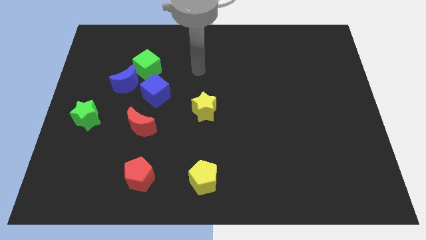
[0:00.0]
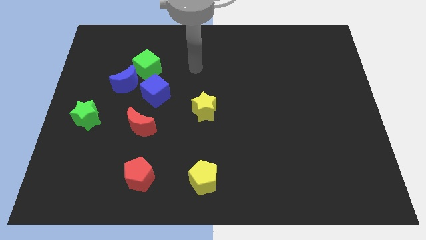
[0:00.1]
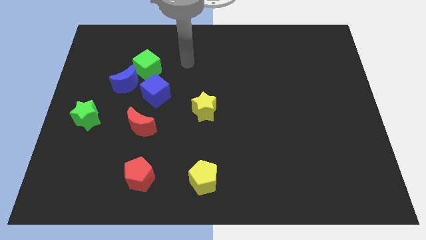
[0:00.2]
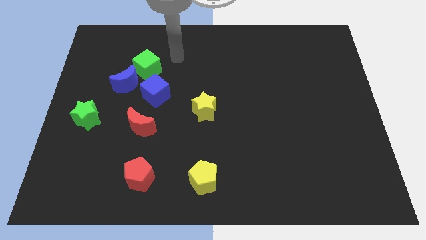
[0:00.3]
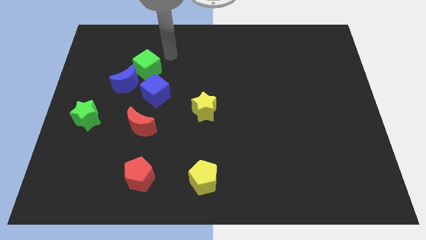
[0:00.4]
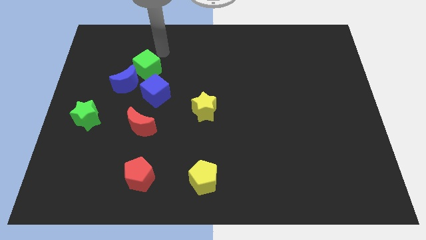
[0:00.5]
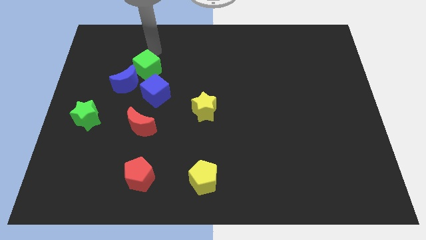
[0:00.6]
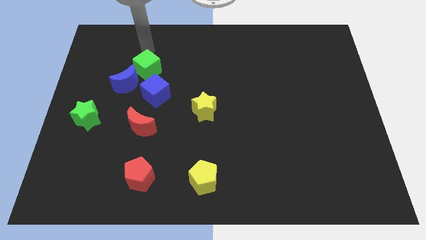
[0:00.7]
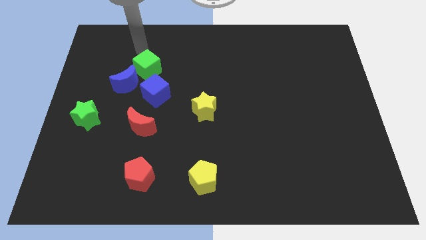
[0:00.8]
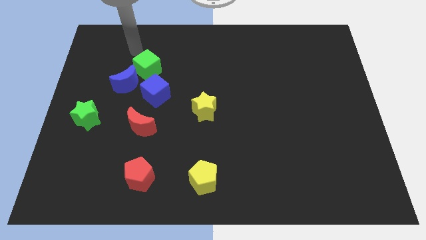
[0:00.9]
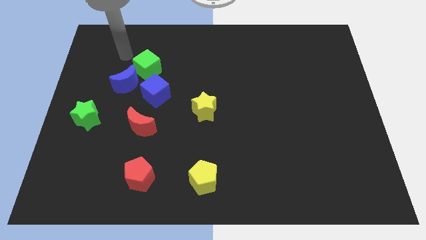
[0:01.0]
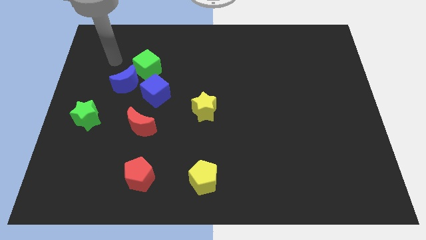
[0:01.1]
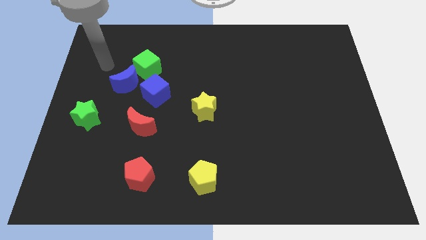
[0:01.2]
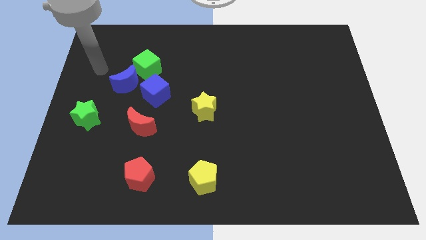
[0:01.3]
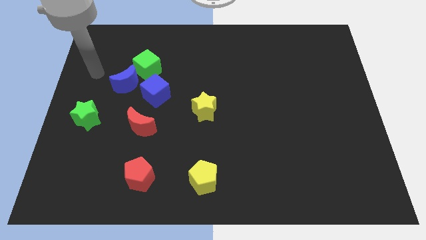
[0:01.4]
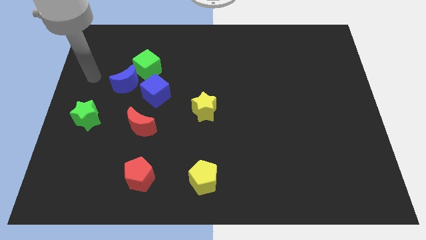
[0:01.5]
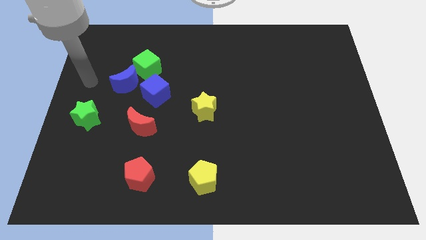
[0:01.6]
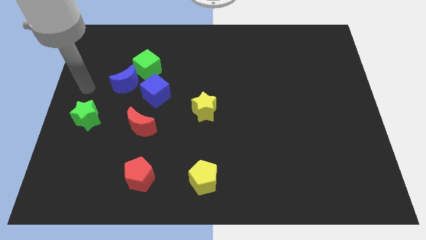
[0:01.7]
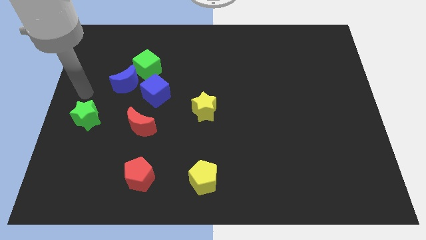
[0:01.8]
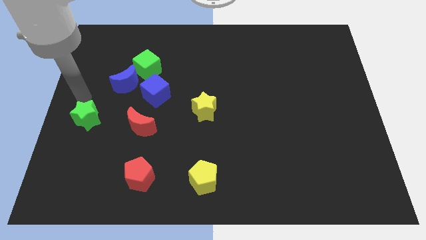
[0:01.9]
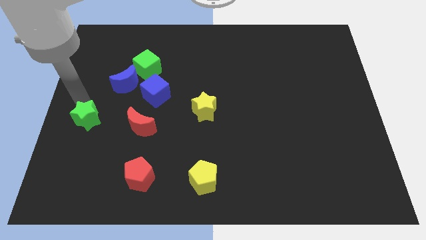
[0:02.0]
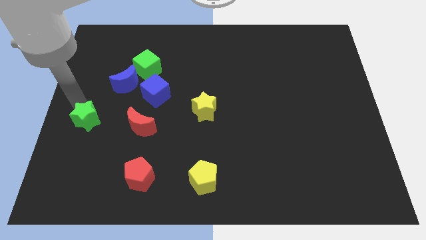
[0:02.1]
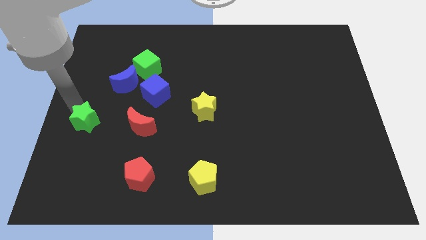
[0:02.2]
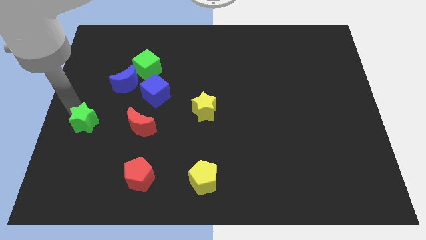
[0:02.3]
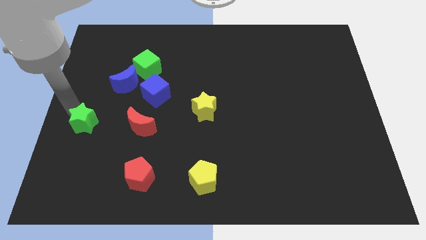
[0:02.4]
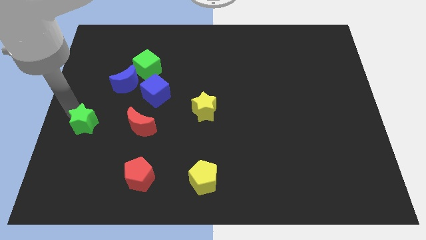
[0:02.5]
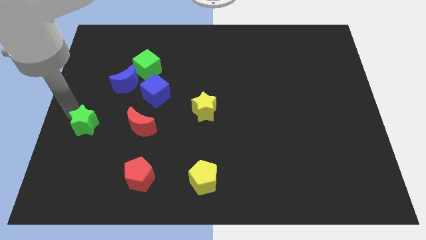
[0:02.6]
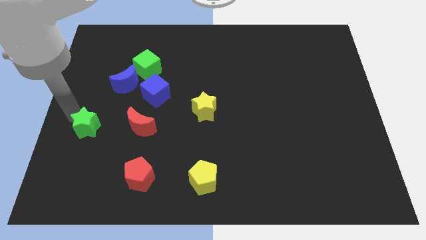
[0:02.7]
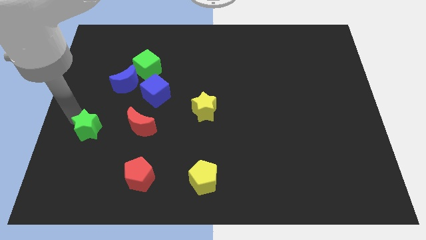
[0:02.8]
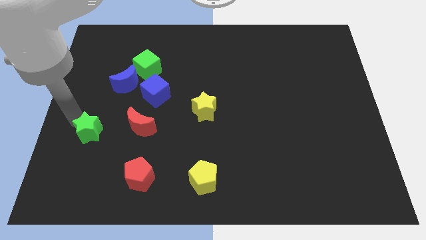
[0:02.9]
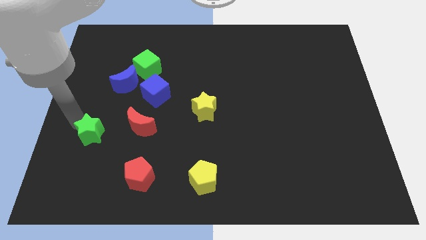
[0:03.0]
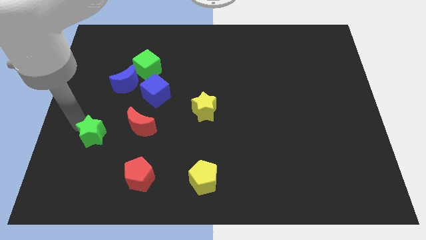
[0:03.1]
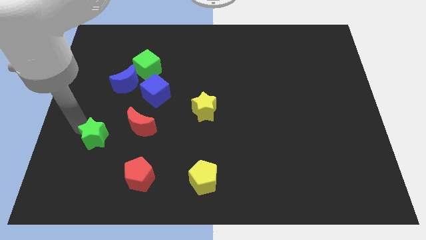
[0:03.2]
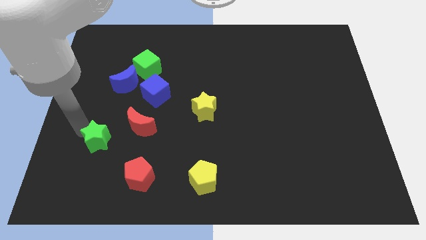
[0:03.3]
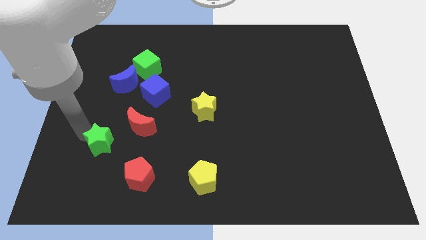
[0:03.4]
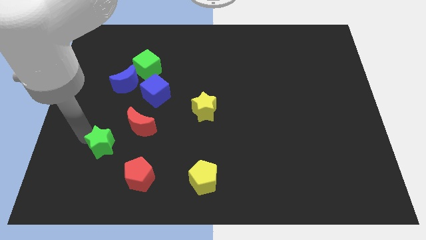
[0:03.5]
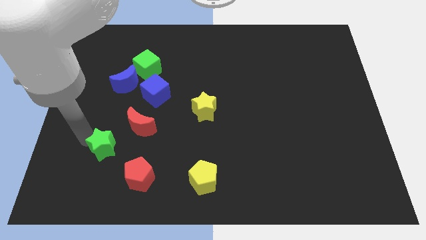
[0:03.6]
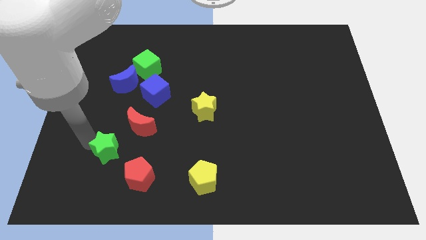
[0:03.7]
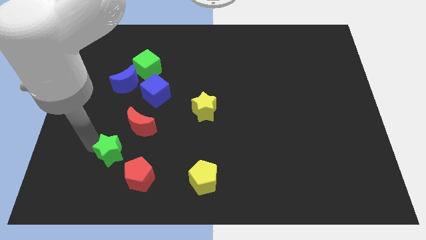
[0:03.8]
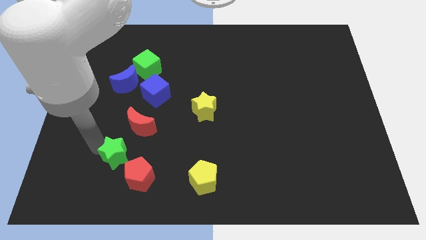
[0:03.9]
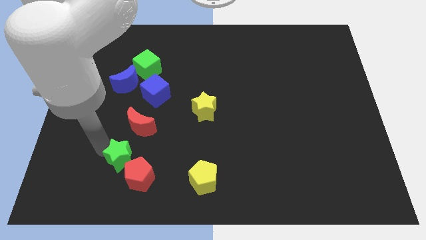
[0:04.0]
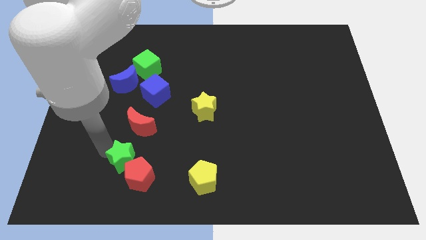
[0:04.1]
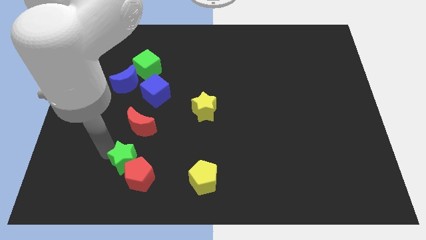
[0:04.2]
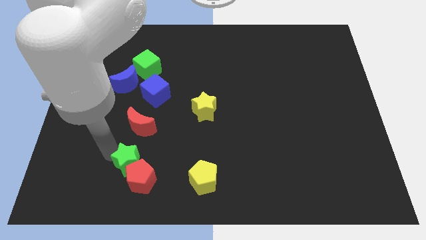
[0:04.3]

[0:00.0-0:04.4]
slide the green star to the red pentagon

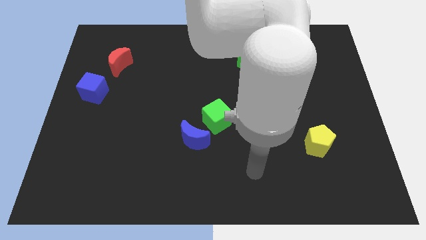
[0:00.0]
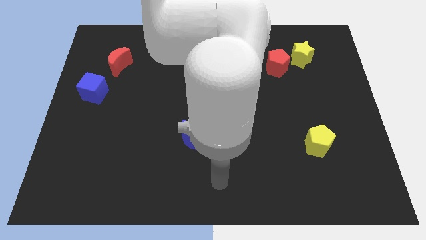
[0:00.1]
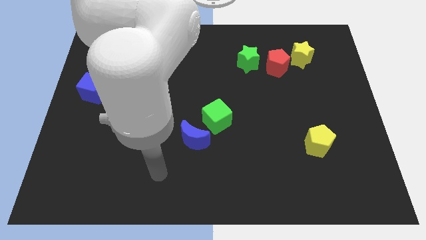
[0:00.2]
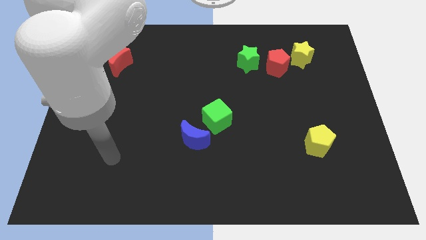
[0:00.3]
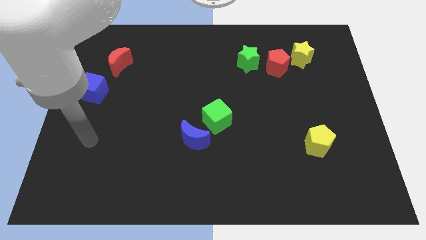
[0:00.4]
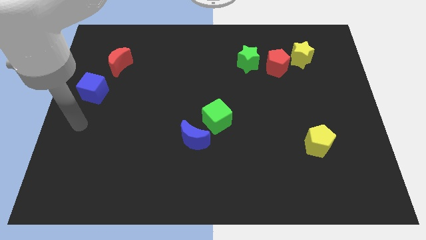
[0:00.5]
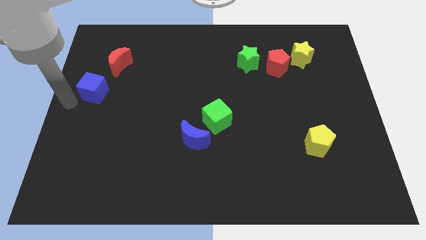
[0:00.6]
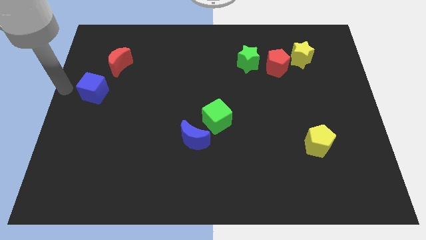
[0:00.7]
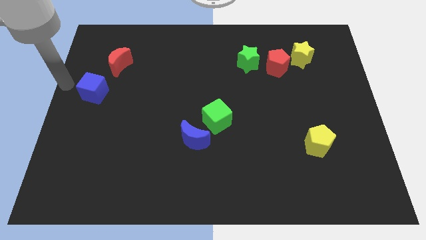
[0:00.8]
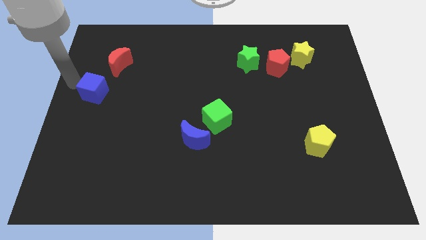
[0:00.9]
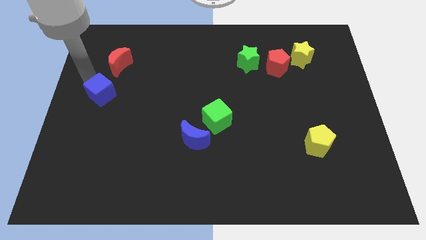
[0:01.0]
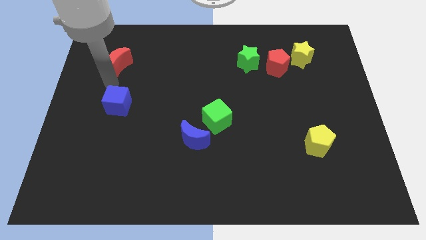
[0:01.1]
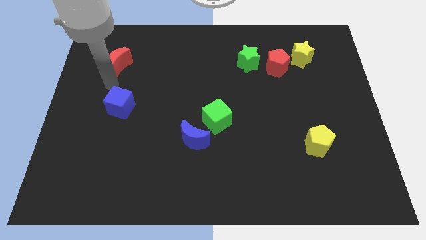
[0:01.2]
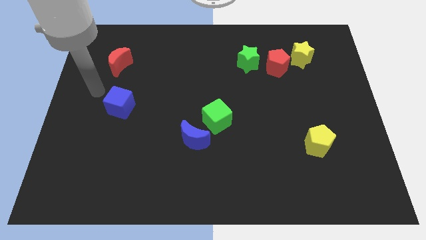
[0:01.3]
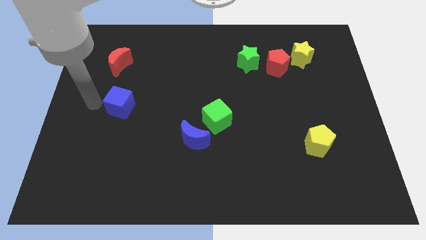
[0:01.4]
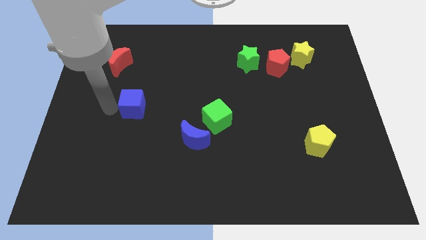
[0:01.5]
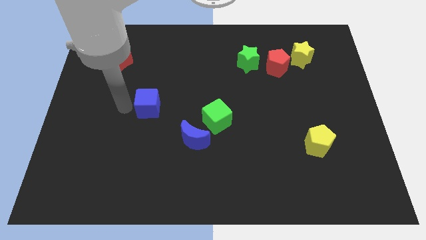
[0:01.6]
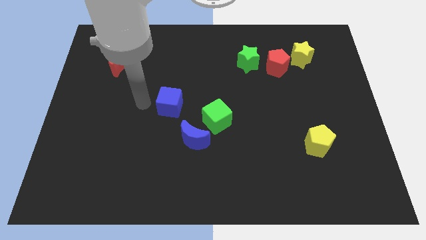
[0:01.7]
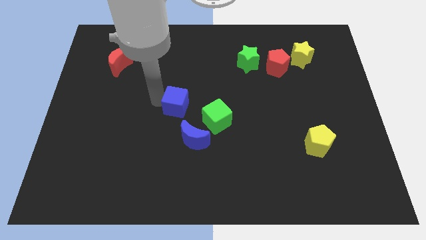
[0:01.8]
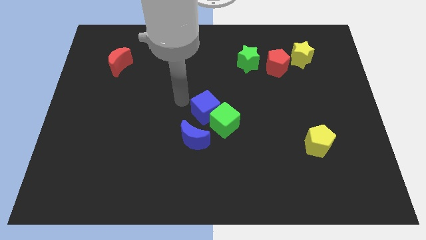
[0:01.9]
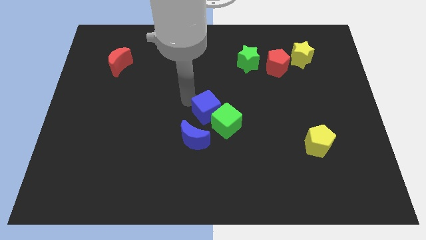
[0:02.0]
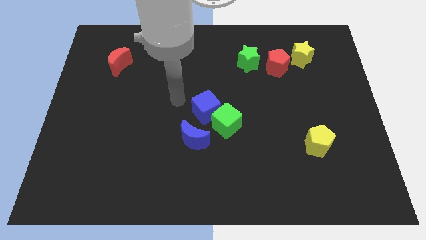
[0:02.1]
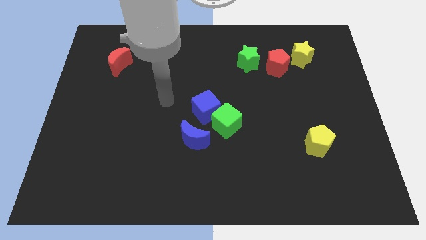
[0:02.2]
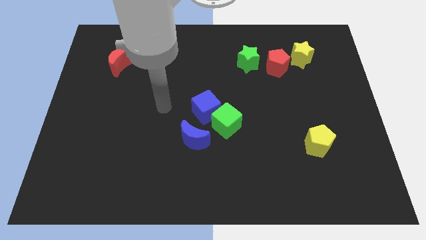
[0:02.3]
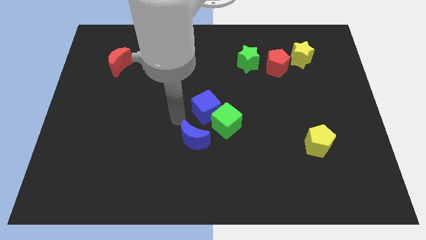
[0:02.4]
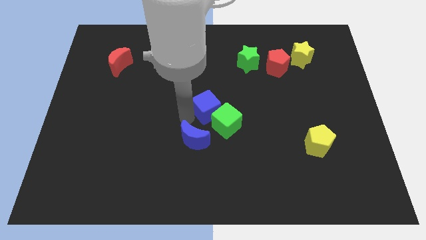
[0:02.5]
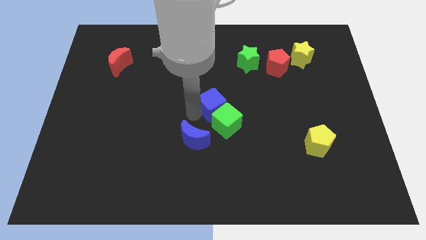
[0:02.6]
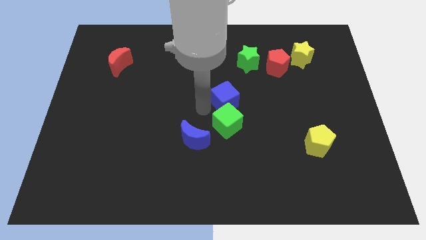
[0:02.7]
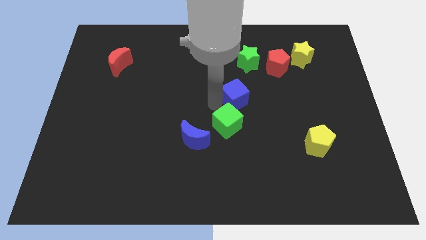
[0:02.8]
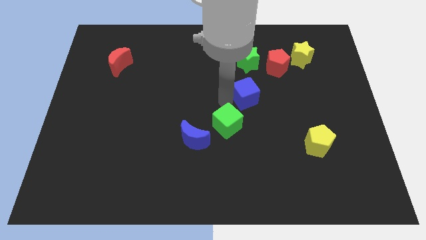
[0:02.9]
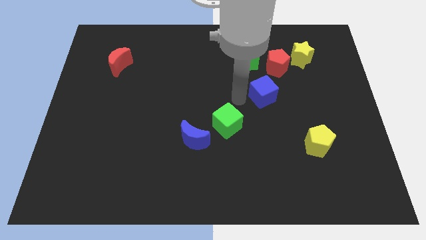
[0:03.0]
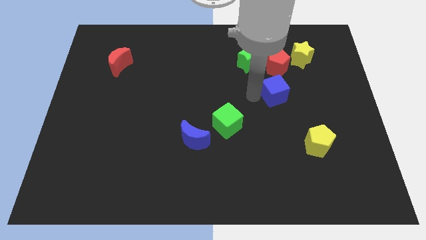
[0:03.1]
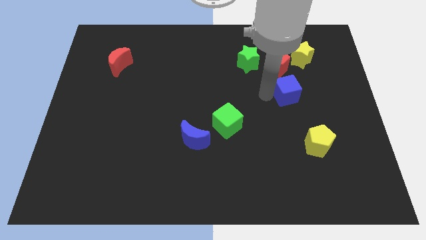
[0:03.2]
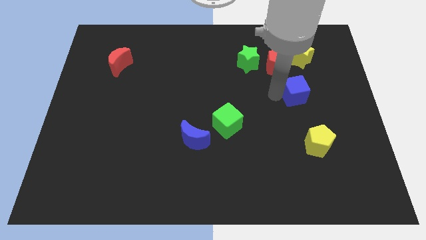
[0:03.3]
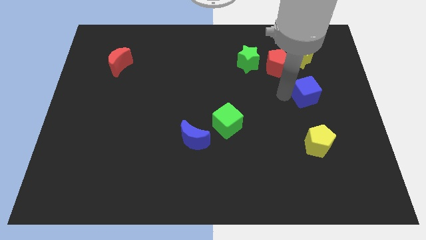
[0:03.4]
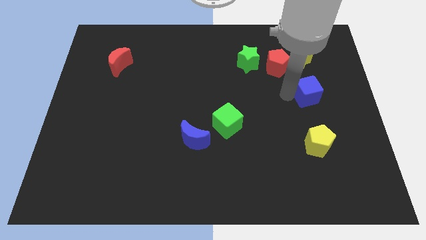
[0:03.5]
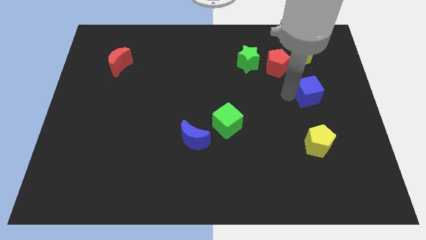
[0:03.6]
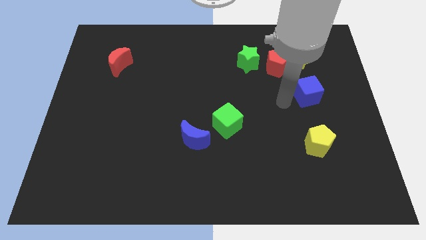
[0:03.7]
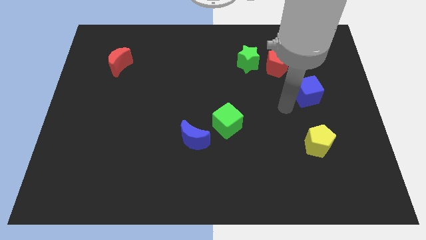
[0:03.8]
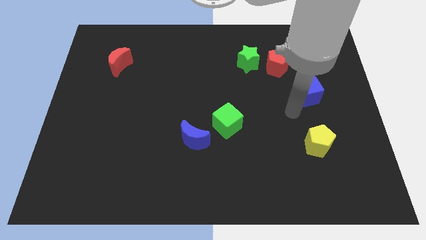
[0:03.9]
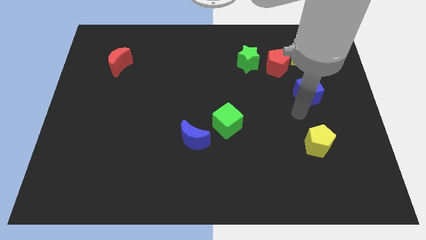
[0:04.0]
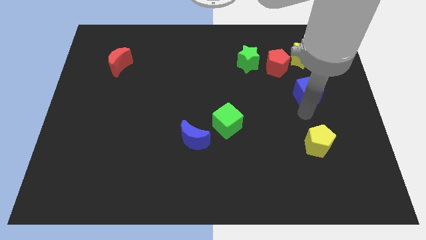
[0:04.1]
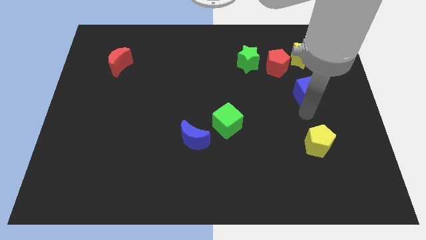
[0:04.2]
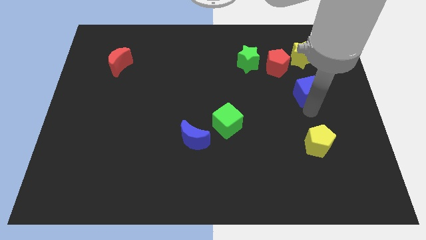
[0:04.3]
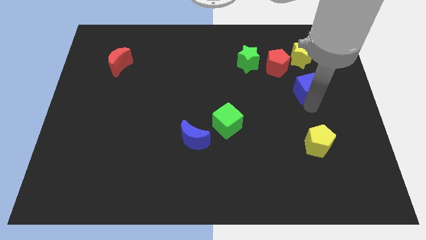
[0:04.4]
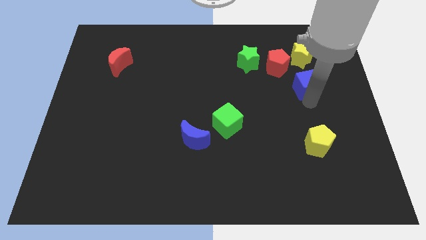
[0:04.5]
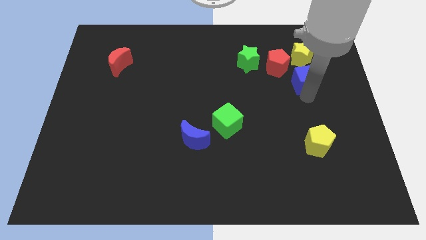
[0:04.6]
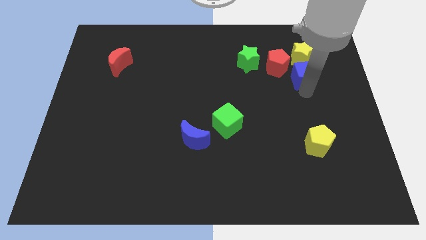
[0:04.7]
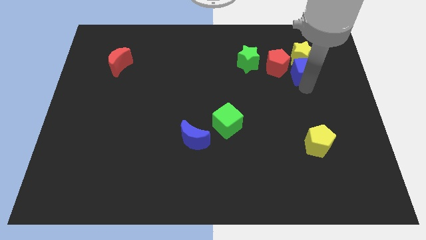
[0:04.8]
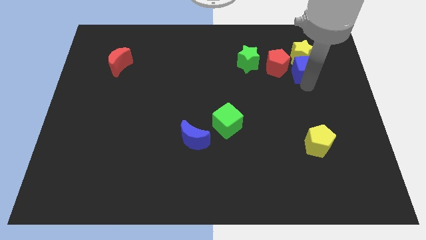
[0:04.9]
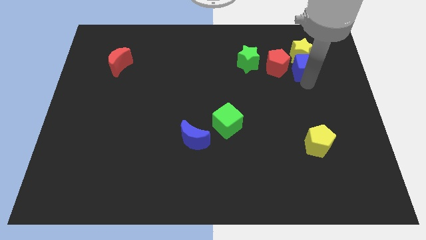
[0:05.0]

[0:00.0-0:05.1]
move the blue cube next to the yellow star
